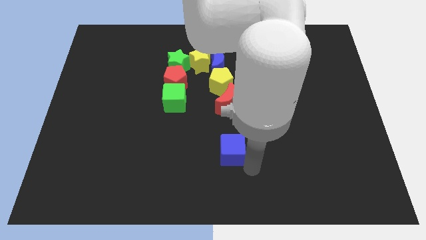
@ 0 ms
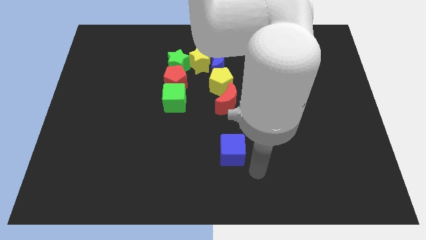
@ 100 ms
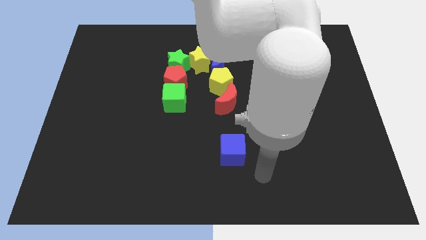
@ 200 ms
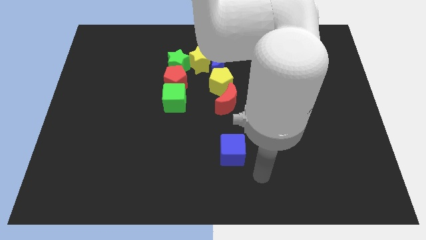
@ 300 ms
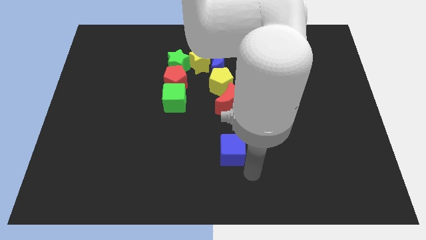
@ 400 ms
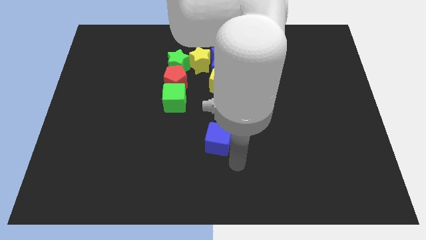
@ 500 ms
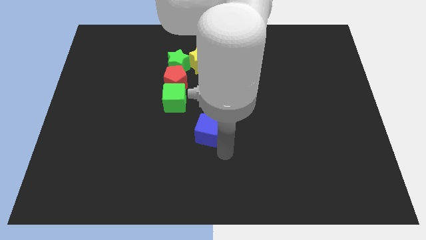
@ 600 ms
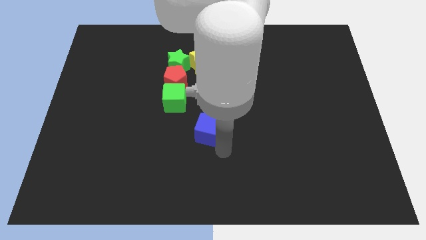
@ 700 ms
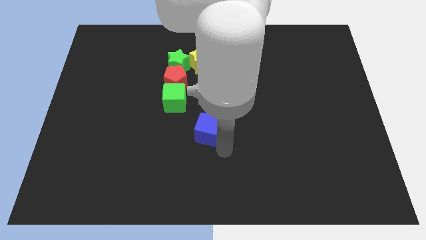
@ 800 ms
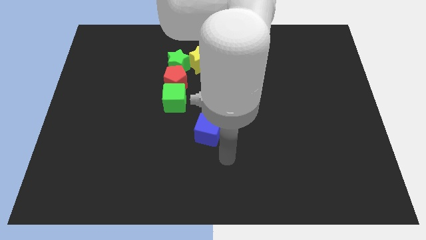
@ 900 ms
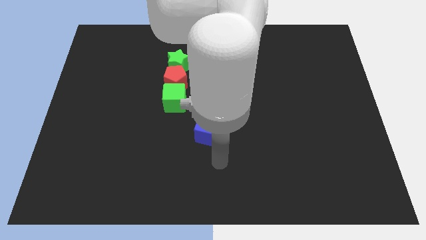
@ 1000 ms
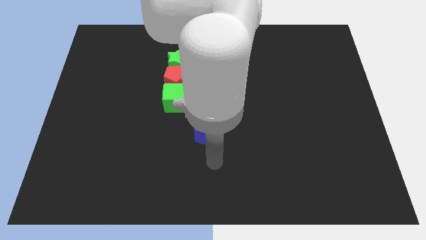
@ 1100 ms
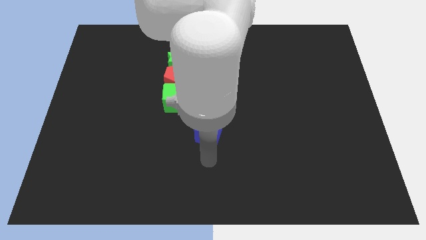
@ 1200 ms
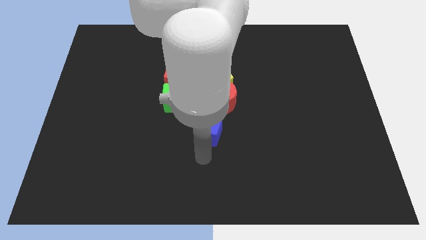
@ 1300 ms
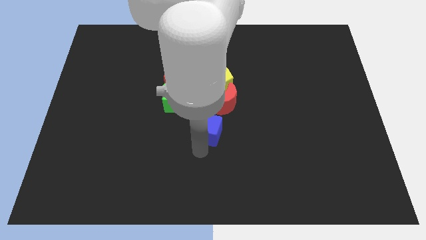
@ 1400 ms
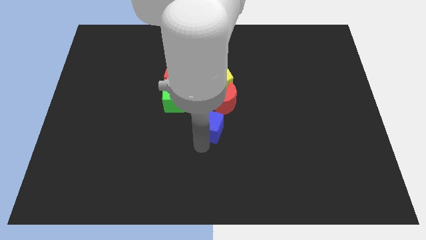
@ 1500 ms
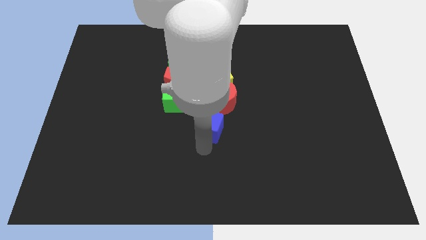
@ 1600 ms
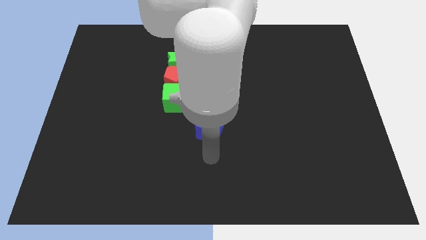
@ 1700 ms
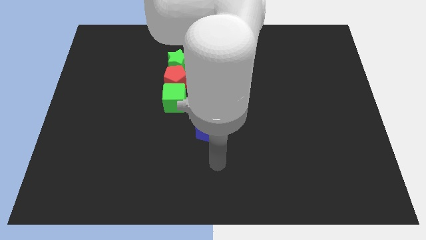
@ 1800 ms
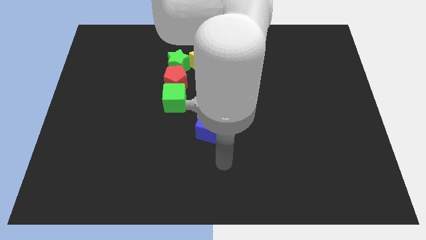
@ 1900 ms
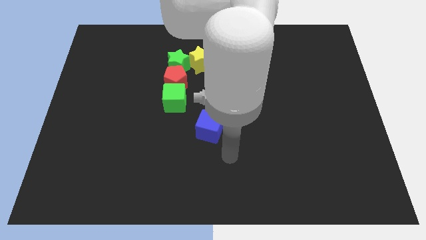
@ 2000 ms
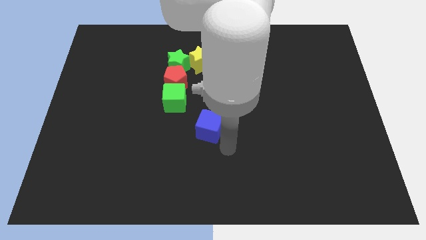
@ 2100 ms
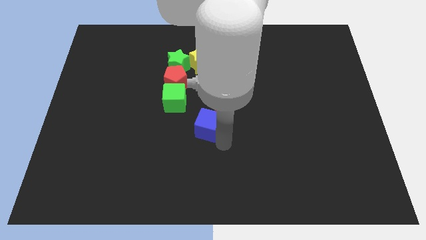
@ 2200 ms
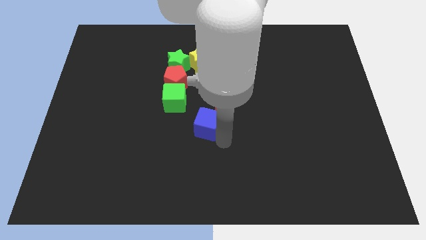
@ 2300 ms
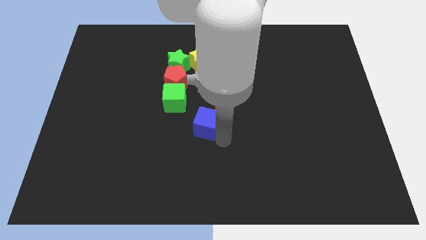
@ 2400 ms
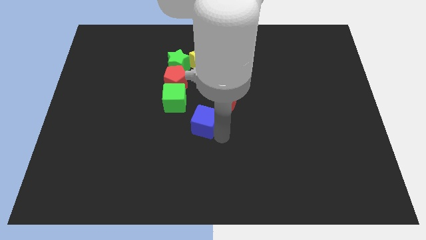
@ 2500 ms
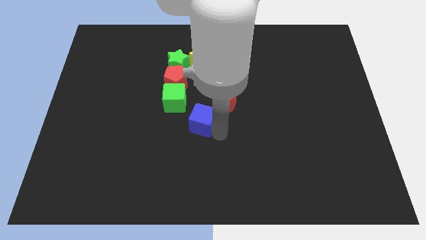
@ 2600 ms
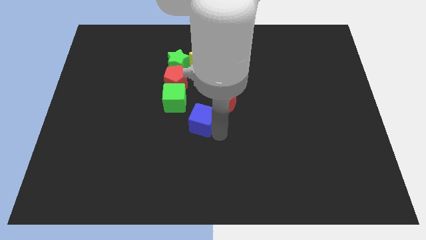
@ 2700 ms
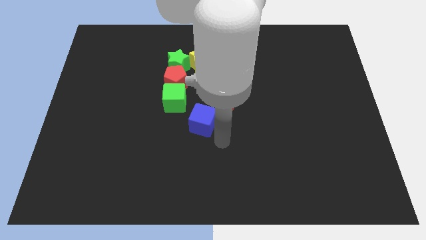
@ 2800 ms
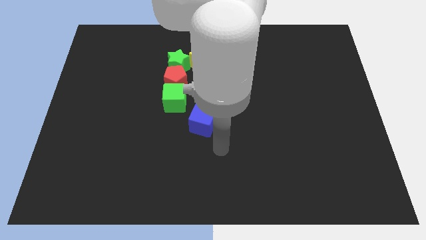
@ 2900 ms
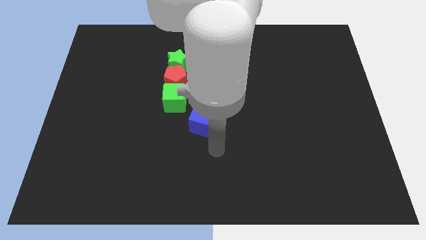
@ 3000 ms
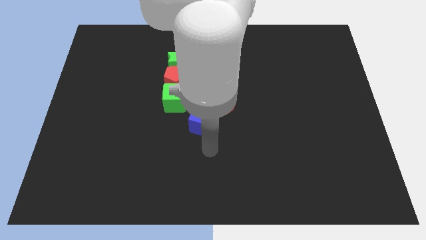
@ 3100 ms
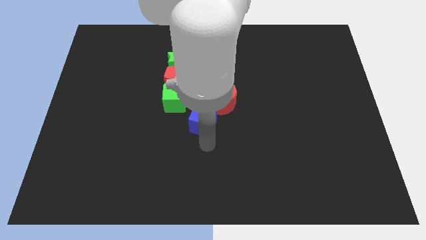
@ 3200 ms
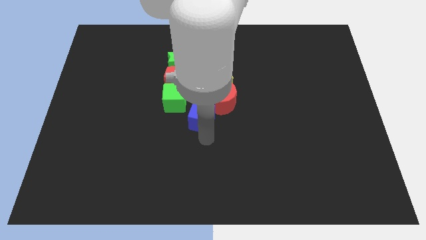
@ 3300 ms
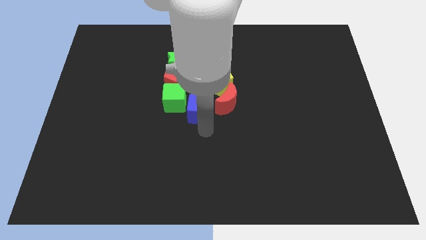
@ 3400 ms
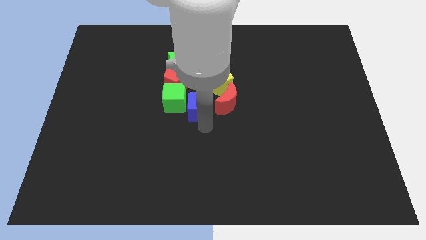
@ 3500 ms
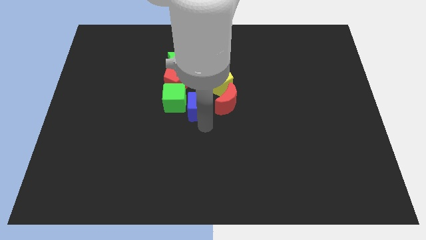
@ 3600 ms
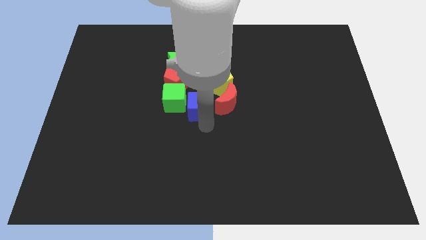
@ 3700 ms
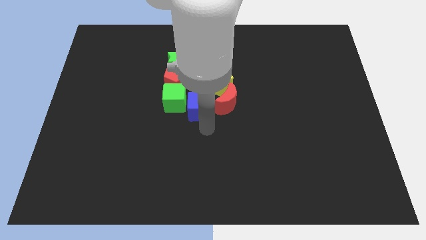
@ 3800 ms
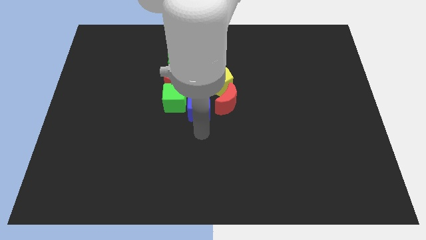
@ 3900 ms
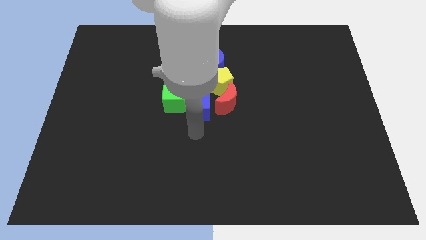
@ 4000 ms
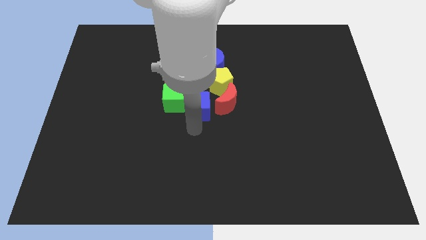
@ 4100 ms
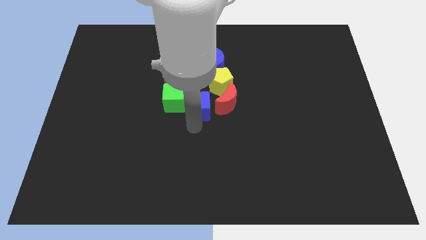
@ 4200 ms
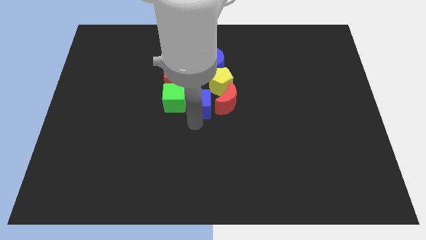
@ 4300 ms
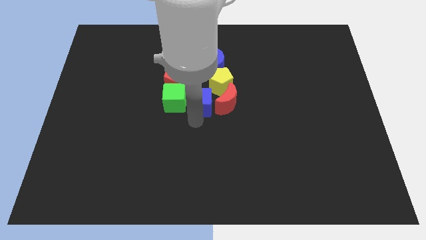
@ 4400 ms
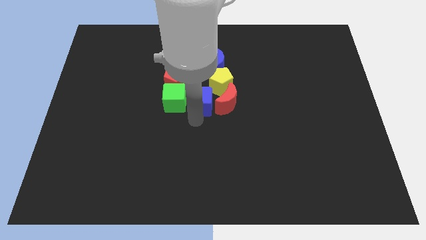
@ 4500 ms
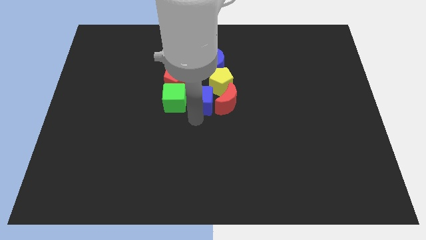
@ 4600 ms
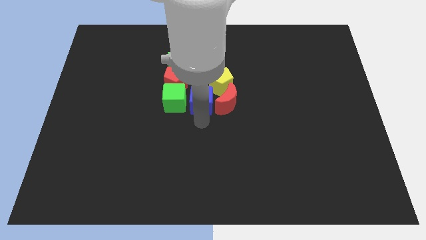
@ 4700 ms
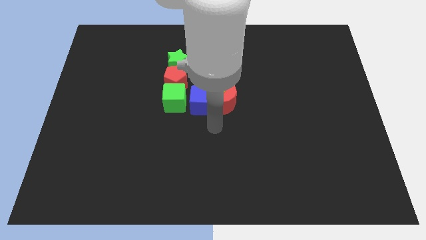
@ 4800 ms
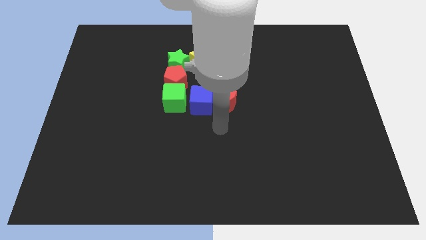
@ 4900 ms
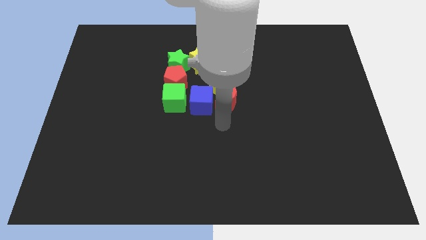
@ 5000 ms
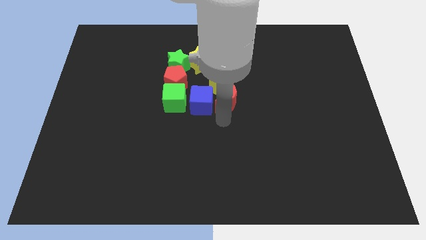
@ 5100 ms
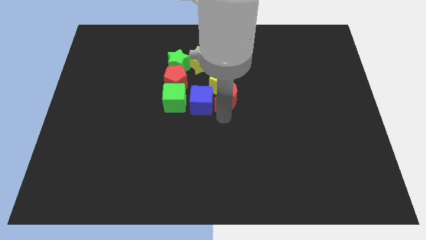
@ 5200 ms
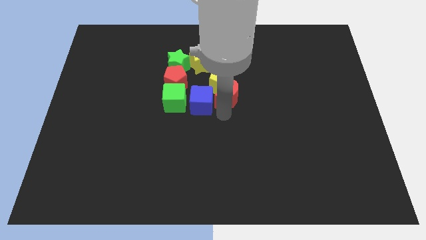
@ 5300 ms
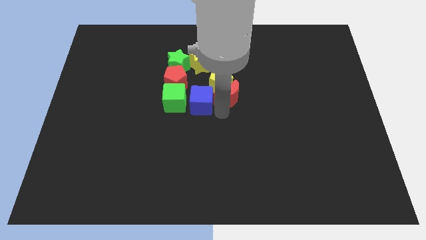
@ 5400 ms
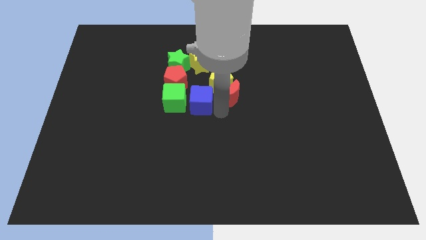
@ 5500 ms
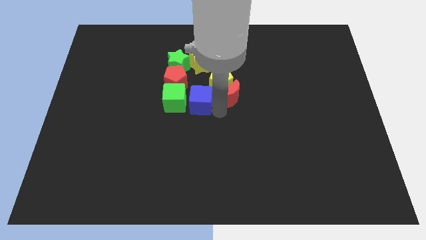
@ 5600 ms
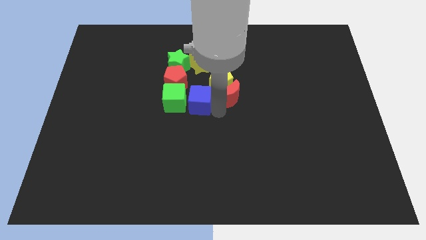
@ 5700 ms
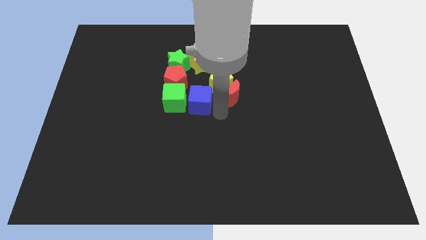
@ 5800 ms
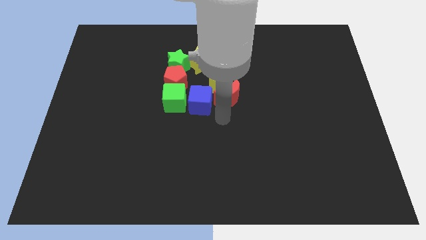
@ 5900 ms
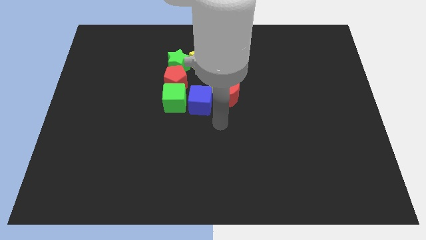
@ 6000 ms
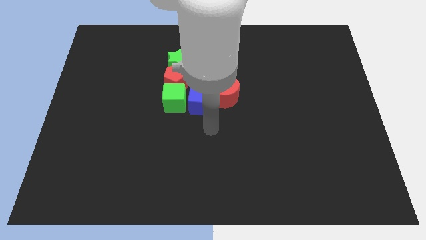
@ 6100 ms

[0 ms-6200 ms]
place the blue cube right to the green cube

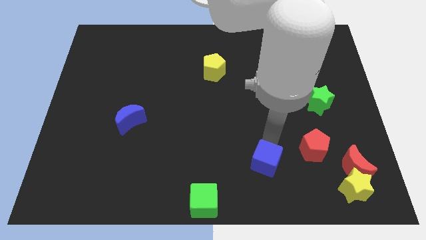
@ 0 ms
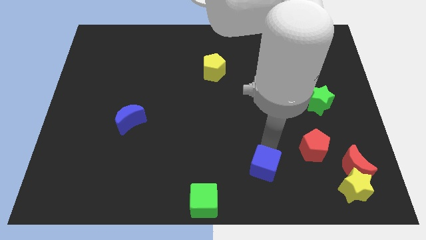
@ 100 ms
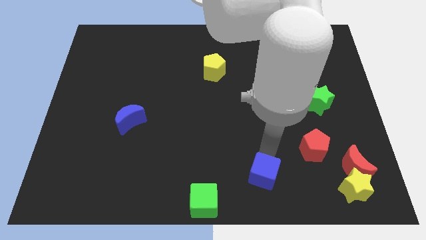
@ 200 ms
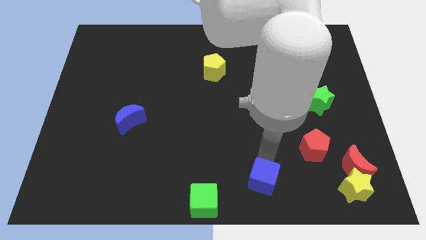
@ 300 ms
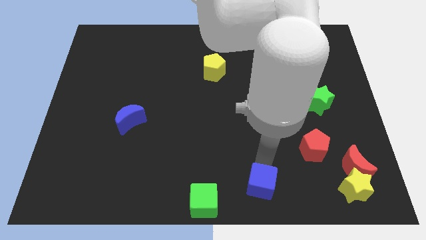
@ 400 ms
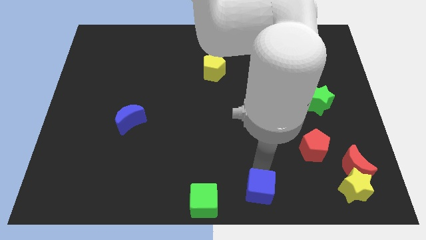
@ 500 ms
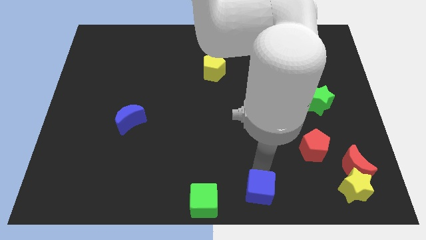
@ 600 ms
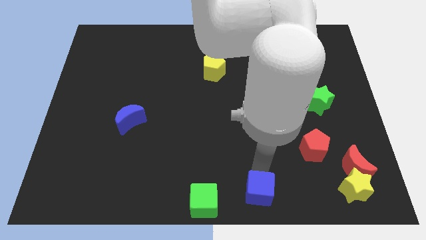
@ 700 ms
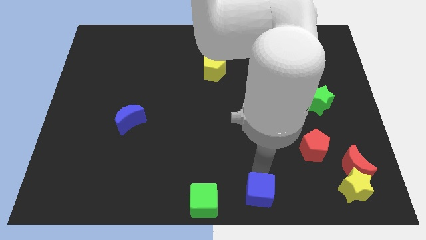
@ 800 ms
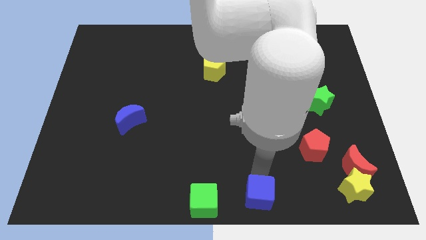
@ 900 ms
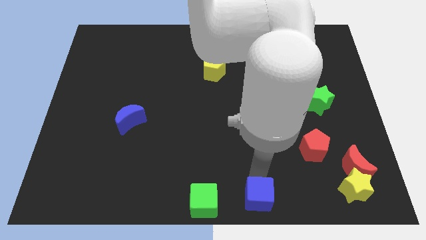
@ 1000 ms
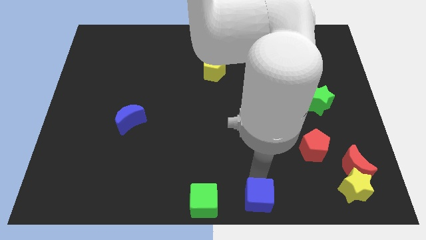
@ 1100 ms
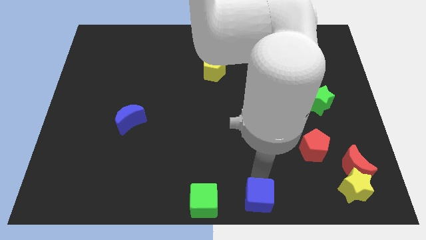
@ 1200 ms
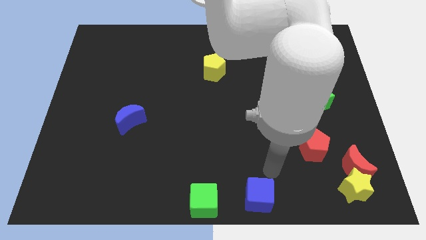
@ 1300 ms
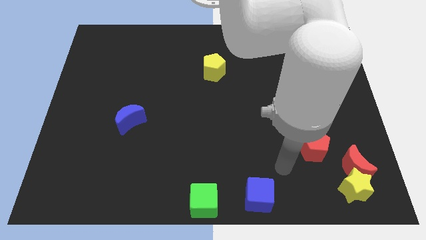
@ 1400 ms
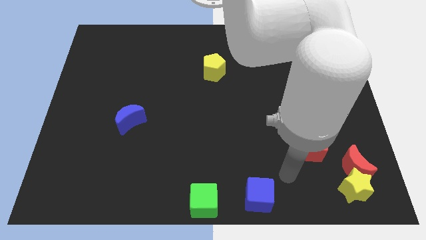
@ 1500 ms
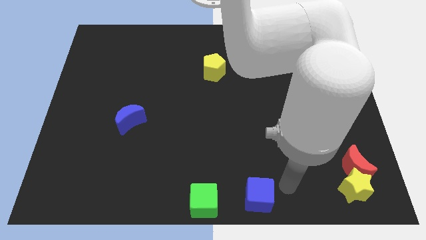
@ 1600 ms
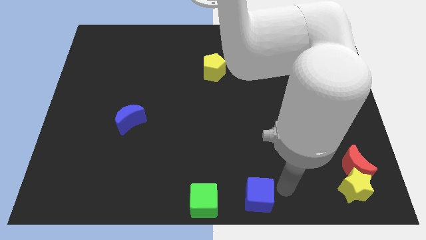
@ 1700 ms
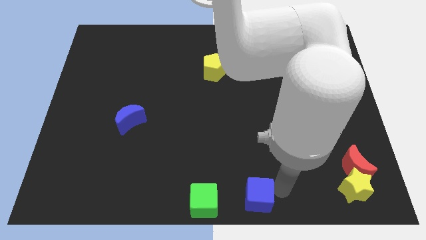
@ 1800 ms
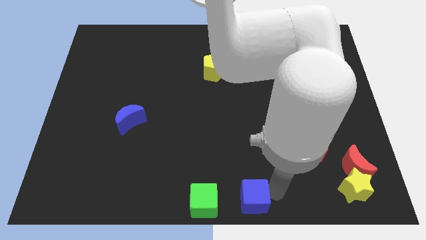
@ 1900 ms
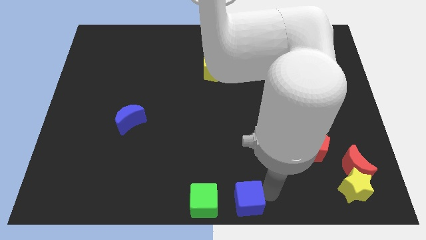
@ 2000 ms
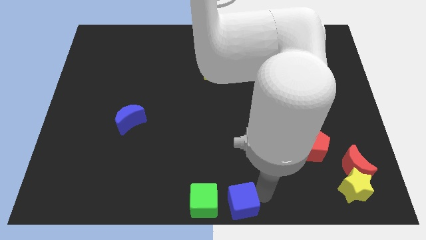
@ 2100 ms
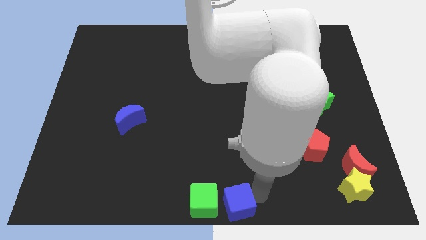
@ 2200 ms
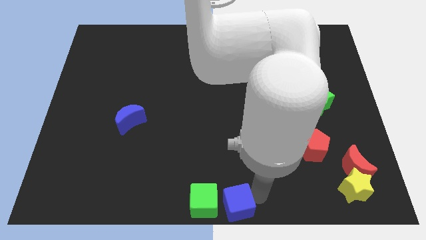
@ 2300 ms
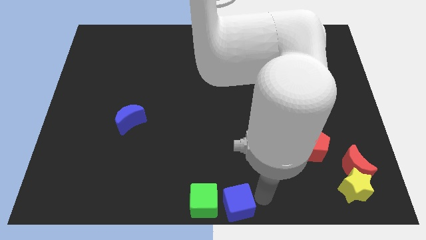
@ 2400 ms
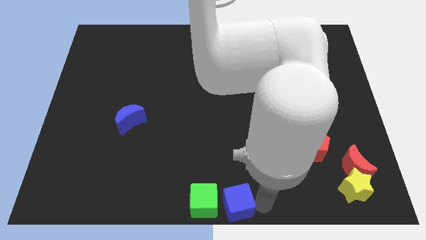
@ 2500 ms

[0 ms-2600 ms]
push the blue cube to the right of green cube

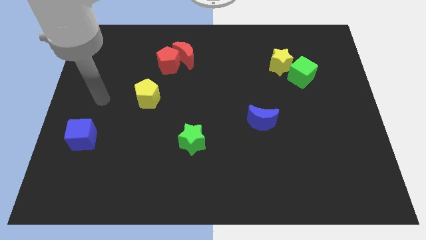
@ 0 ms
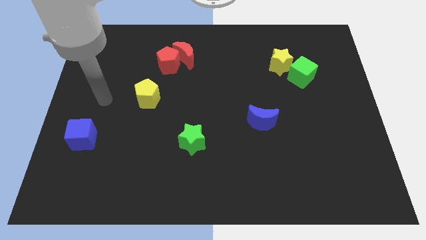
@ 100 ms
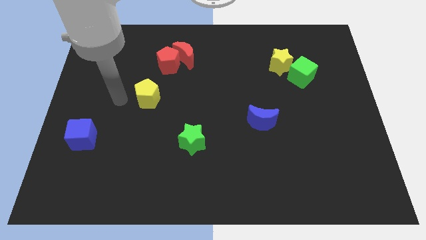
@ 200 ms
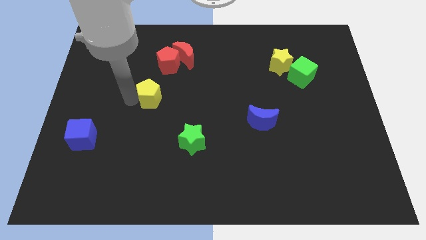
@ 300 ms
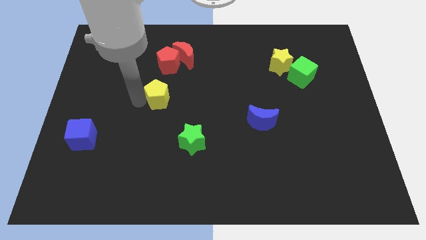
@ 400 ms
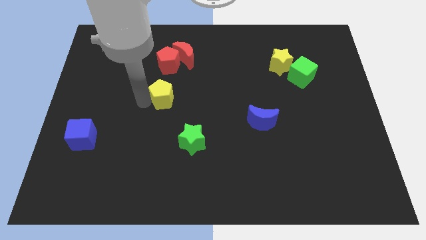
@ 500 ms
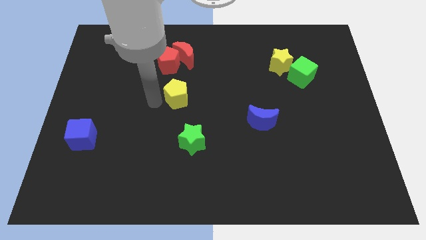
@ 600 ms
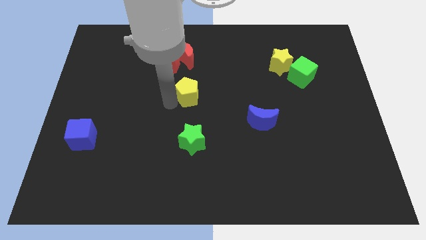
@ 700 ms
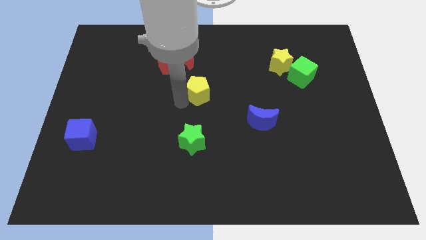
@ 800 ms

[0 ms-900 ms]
push the yellow pentagon towards the top of the green star
